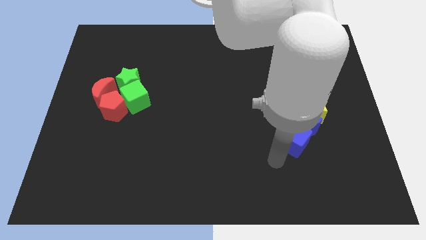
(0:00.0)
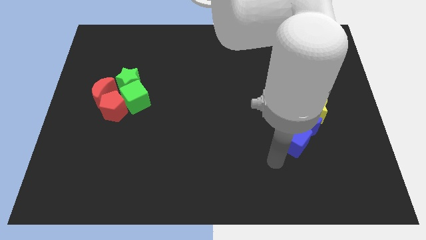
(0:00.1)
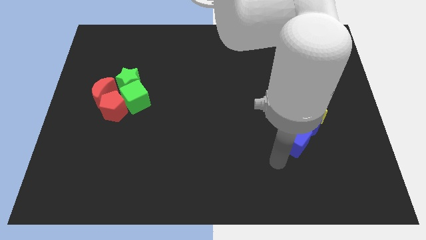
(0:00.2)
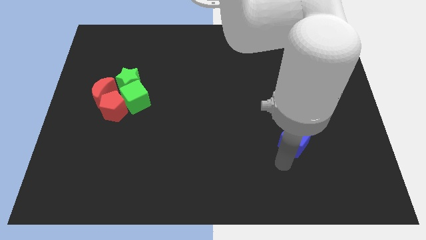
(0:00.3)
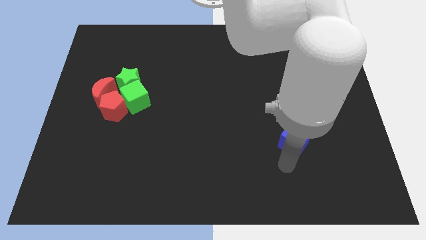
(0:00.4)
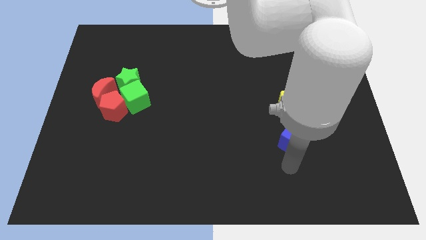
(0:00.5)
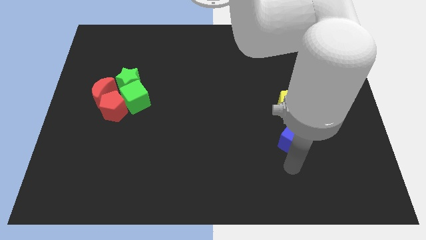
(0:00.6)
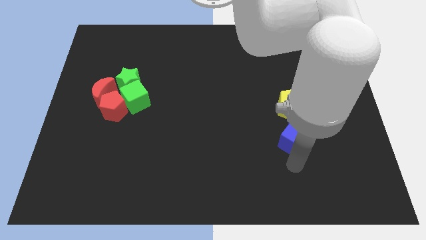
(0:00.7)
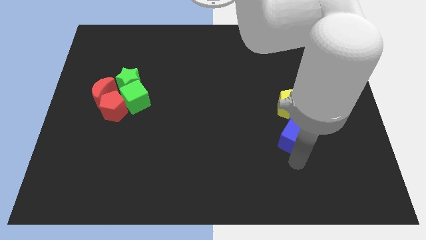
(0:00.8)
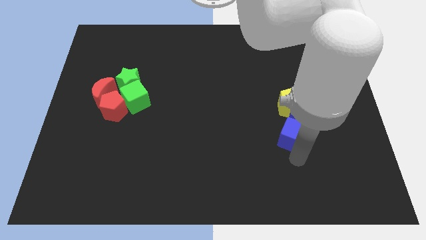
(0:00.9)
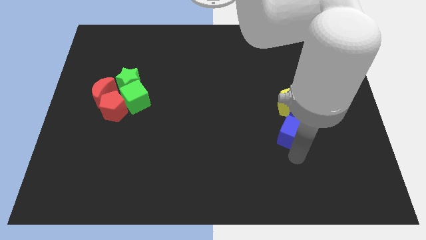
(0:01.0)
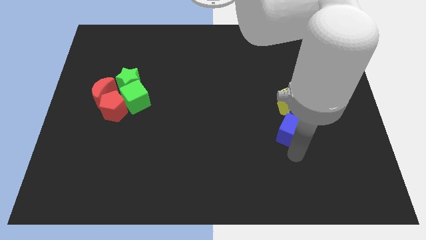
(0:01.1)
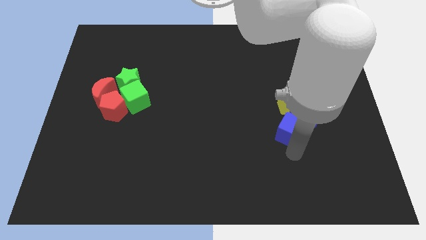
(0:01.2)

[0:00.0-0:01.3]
slide the blue cube into the blue crescent

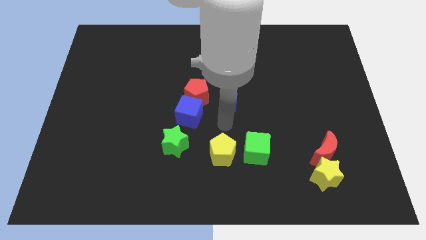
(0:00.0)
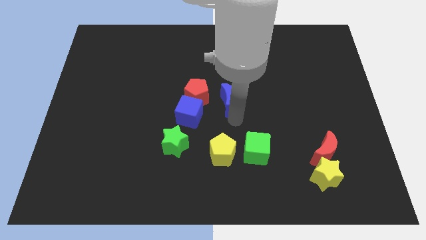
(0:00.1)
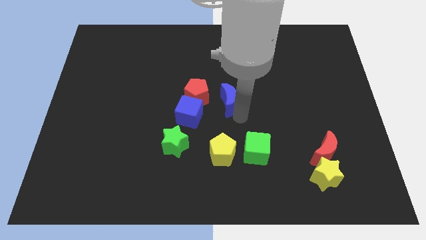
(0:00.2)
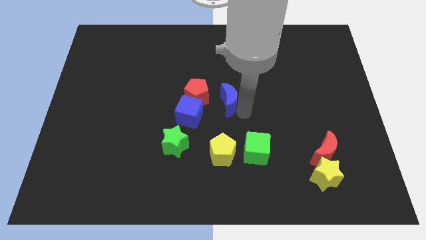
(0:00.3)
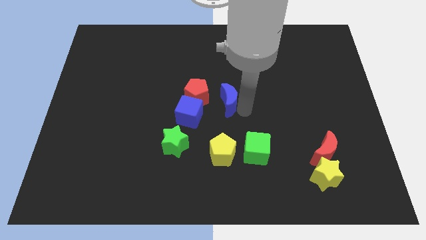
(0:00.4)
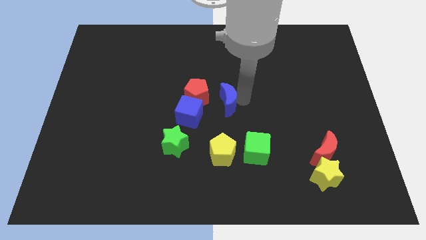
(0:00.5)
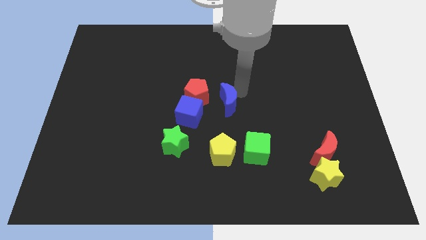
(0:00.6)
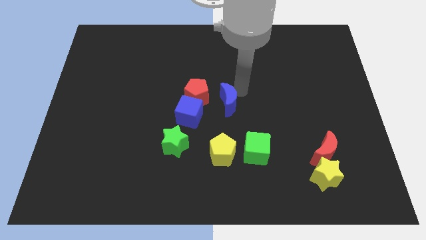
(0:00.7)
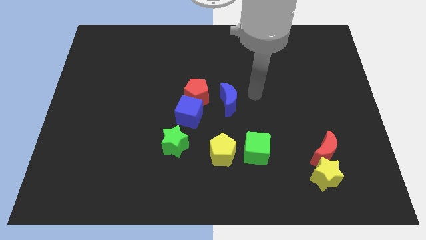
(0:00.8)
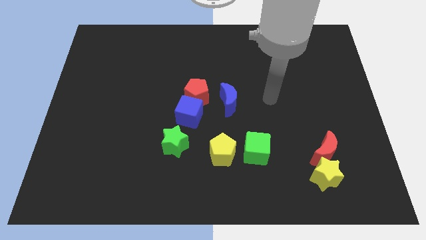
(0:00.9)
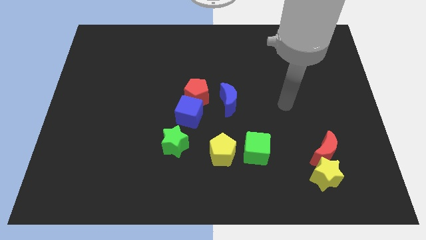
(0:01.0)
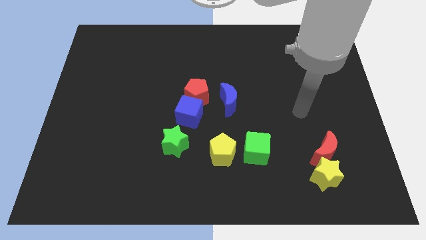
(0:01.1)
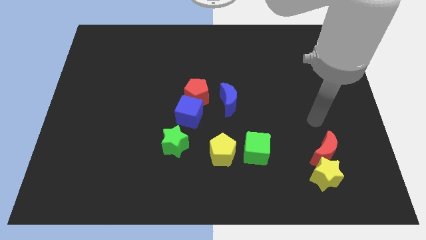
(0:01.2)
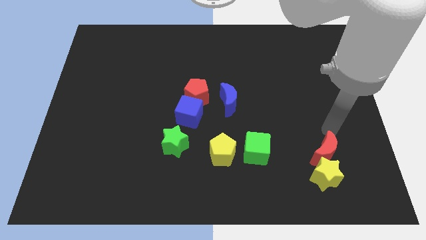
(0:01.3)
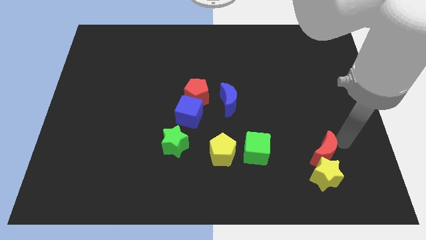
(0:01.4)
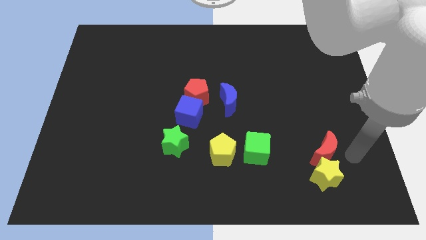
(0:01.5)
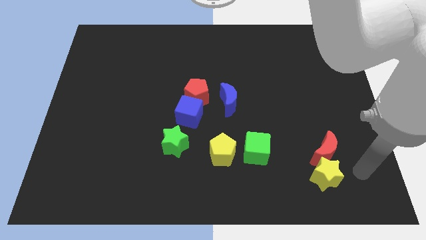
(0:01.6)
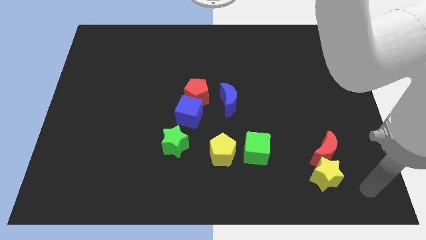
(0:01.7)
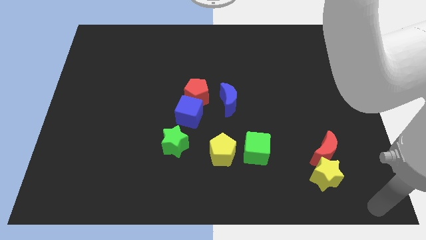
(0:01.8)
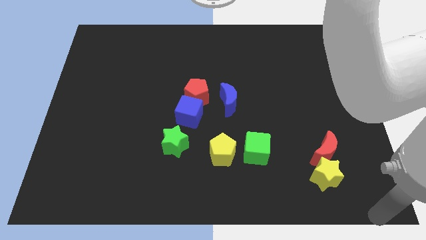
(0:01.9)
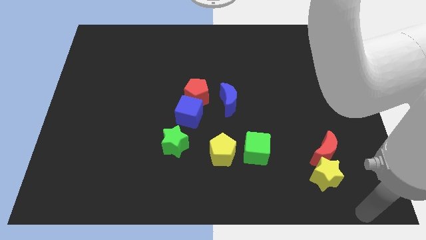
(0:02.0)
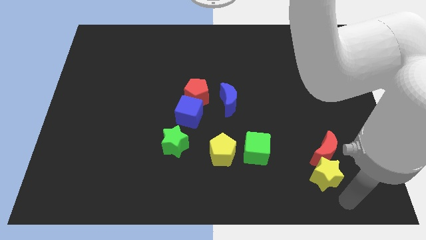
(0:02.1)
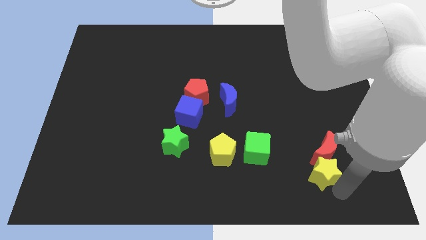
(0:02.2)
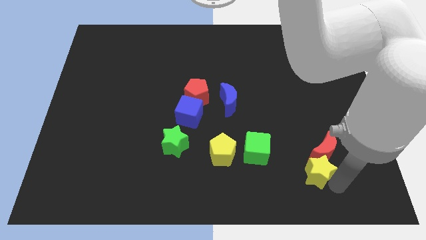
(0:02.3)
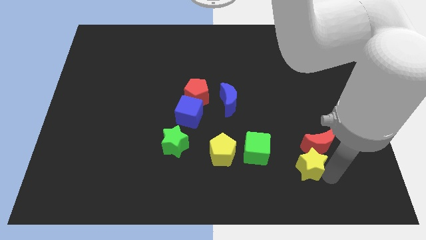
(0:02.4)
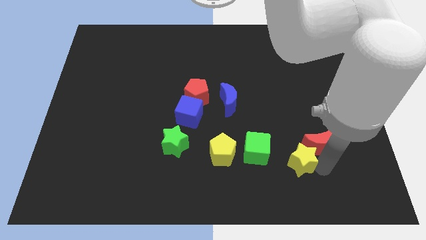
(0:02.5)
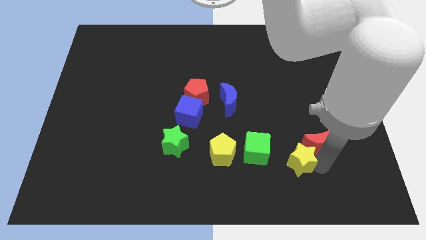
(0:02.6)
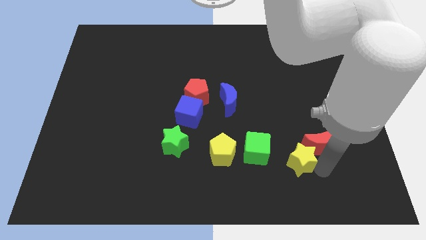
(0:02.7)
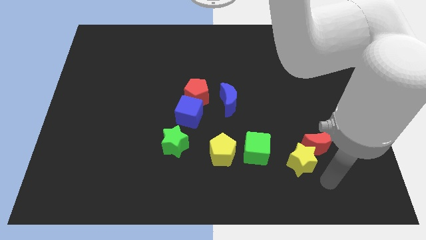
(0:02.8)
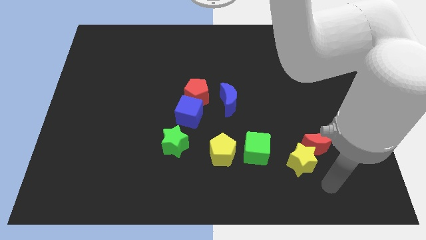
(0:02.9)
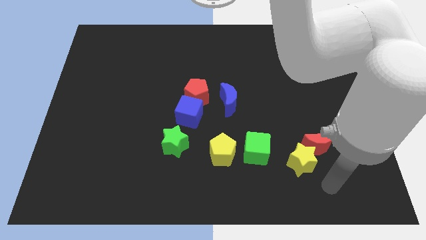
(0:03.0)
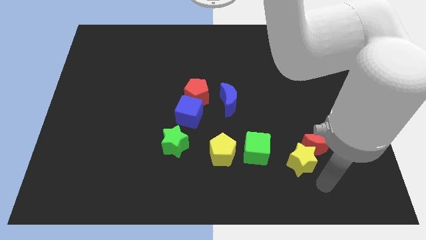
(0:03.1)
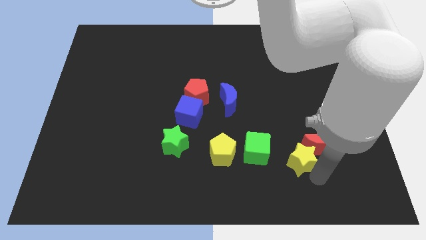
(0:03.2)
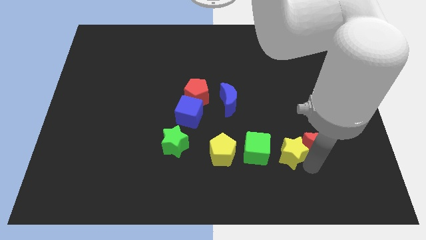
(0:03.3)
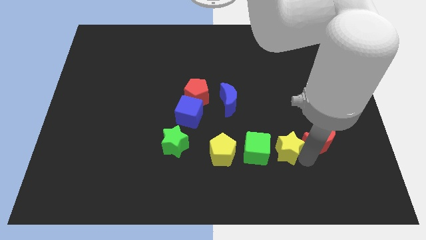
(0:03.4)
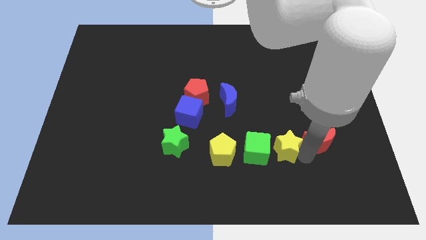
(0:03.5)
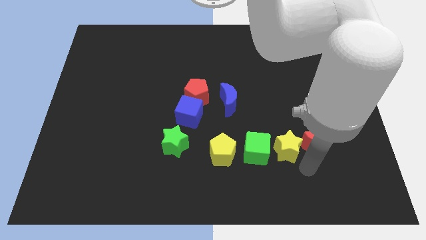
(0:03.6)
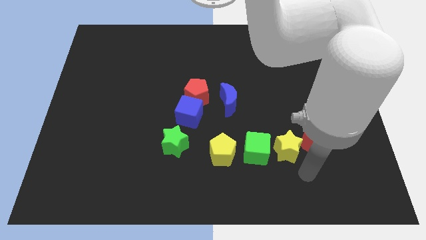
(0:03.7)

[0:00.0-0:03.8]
slide the yellow star to the left side of the red moon

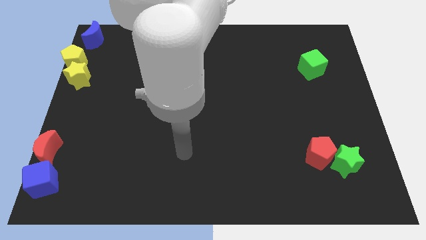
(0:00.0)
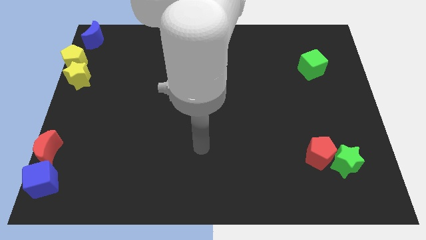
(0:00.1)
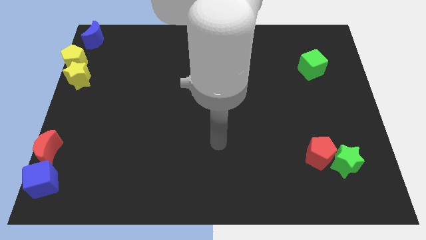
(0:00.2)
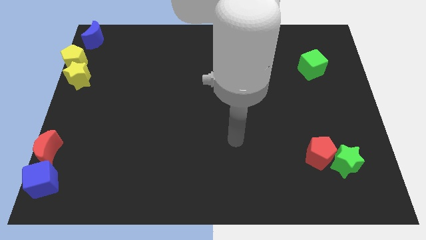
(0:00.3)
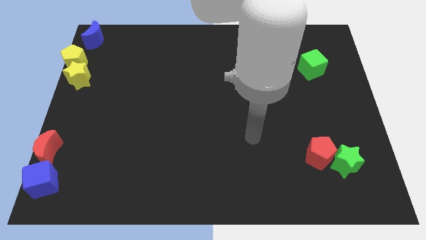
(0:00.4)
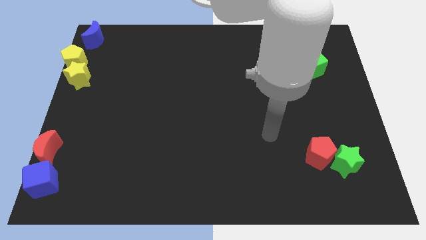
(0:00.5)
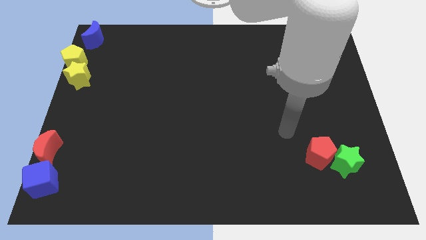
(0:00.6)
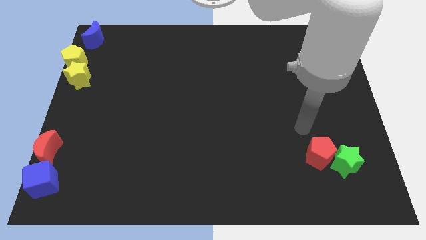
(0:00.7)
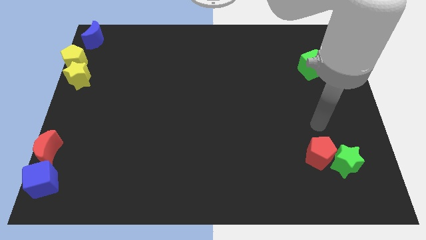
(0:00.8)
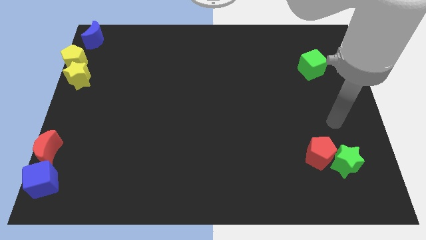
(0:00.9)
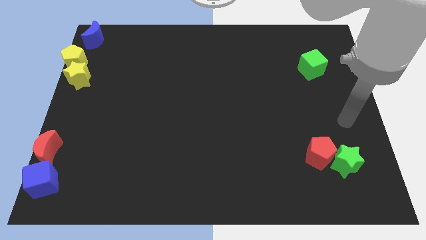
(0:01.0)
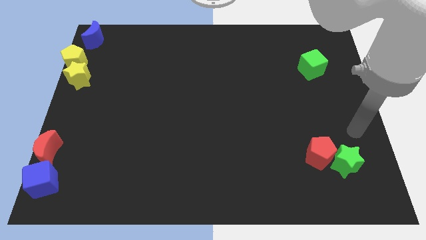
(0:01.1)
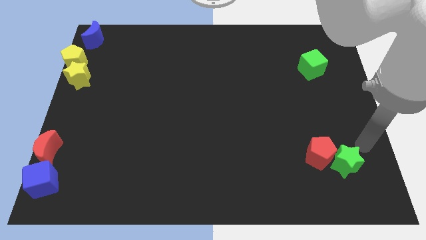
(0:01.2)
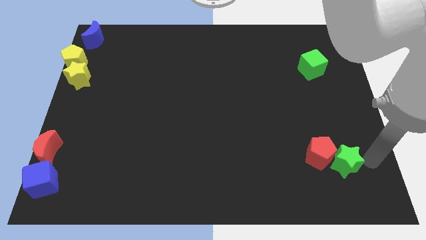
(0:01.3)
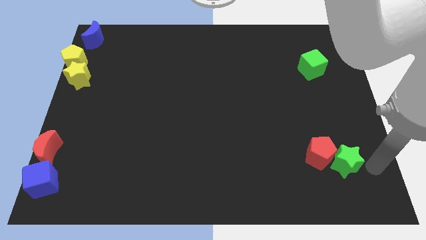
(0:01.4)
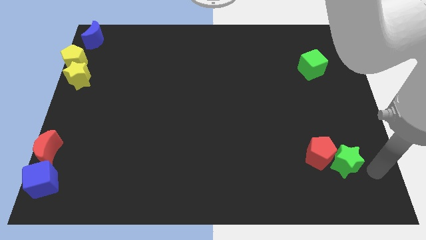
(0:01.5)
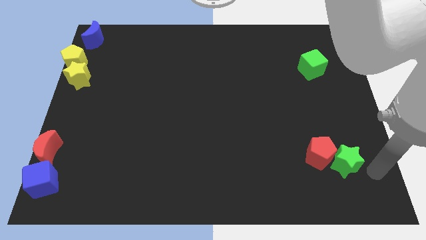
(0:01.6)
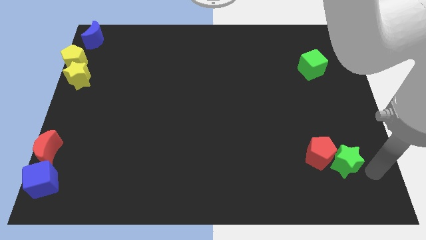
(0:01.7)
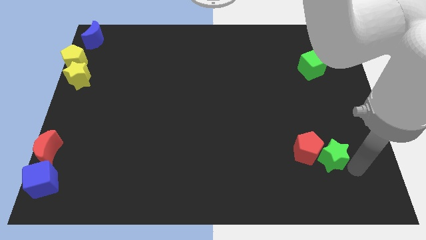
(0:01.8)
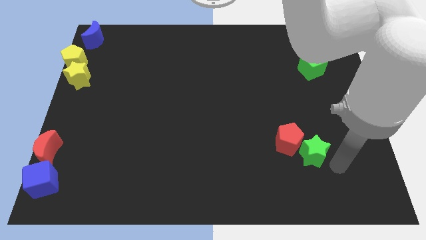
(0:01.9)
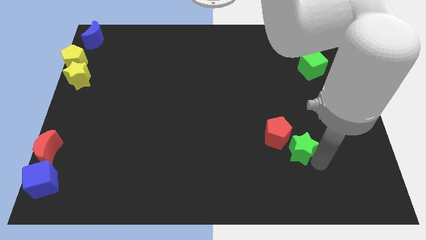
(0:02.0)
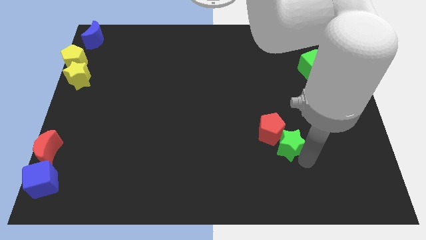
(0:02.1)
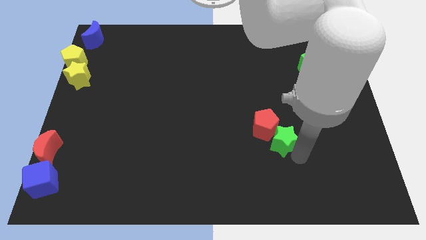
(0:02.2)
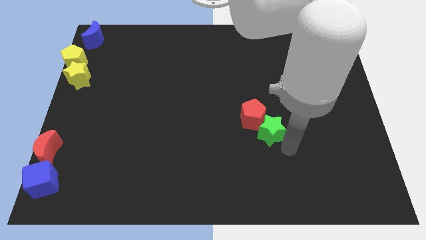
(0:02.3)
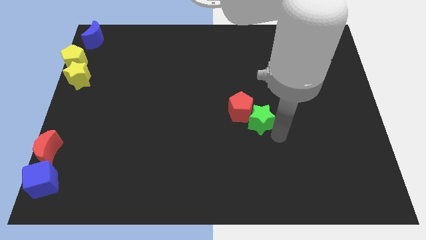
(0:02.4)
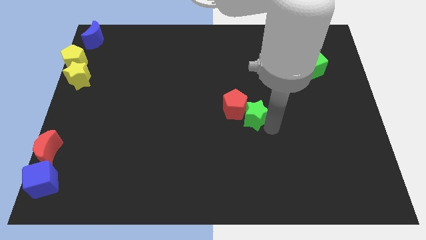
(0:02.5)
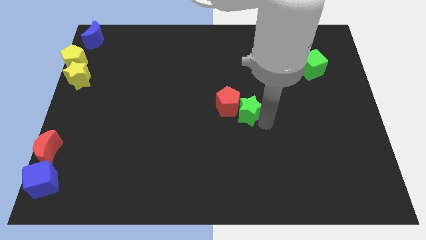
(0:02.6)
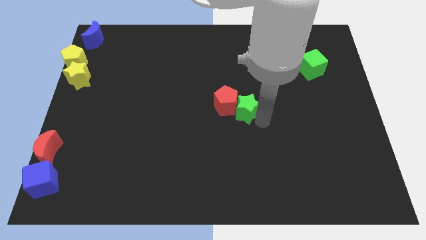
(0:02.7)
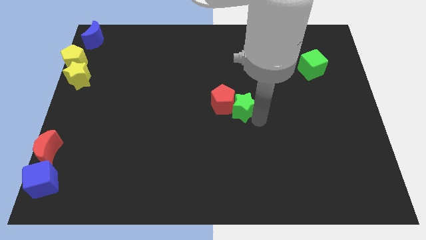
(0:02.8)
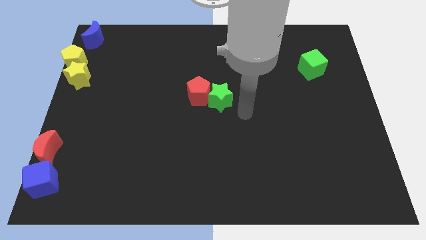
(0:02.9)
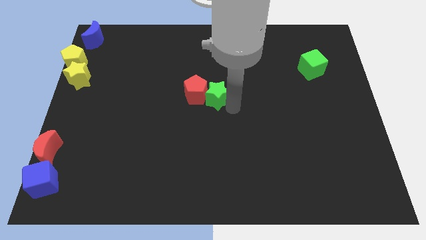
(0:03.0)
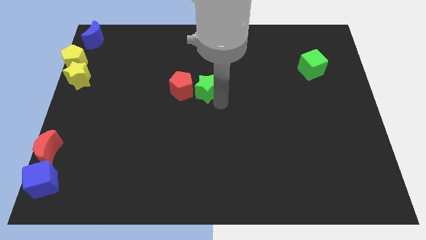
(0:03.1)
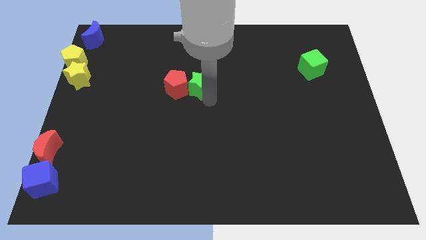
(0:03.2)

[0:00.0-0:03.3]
drag green star towards middle of the board

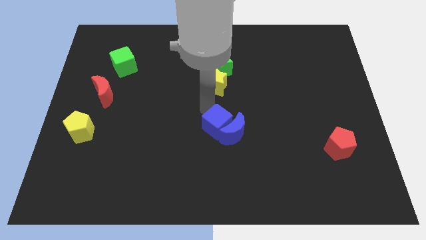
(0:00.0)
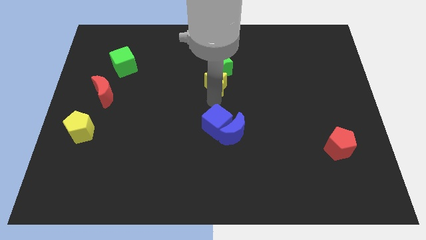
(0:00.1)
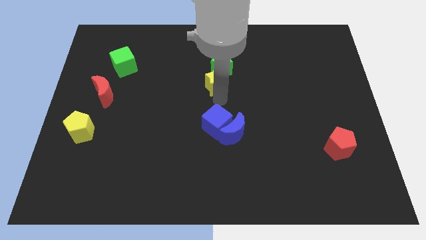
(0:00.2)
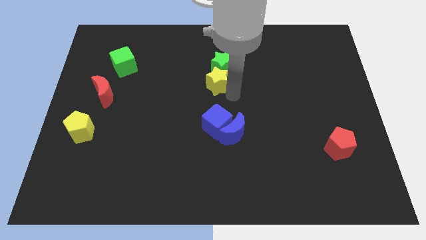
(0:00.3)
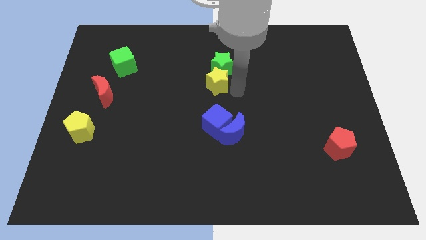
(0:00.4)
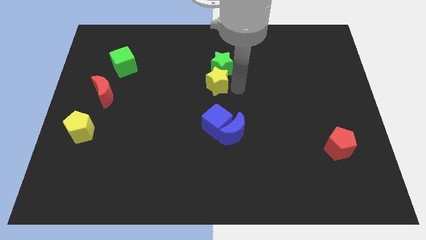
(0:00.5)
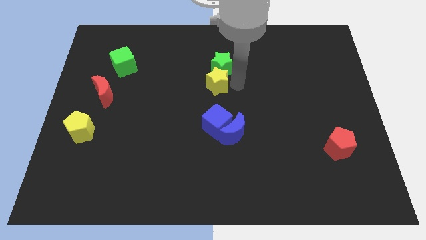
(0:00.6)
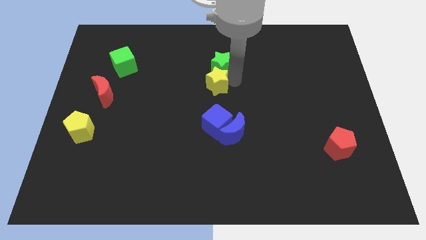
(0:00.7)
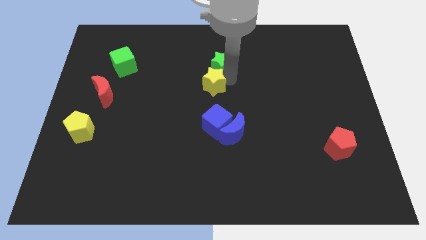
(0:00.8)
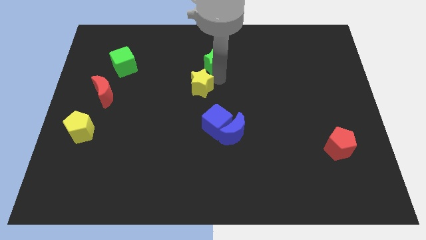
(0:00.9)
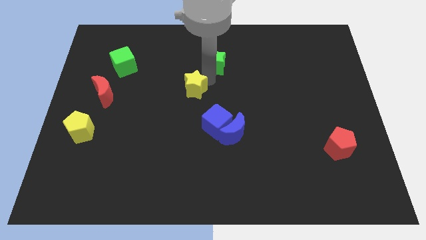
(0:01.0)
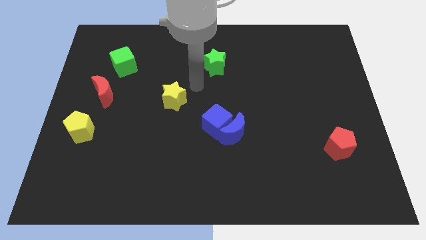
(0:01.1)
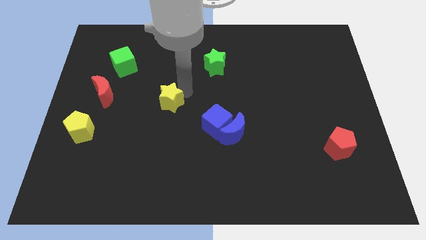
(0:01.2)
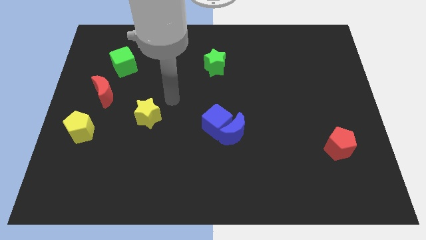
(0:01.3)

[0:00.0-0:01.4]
separate the yellow star from the green star
